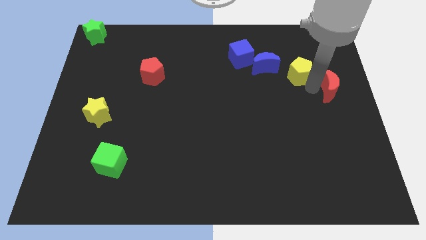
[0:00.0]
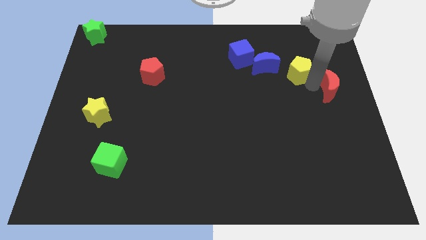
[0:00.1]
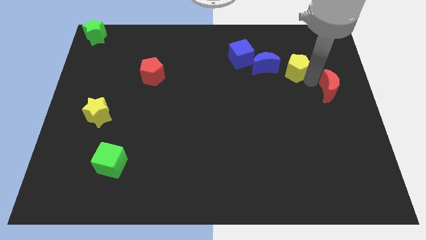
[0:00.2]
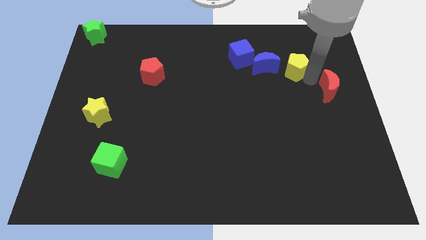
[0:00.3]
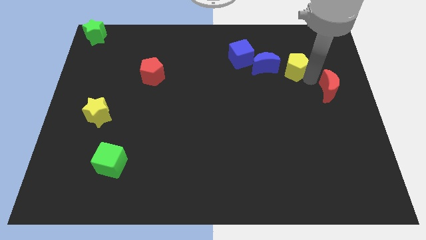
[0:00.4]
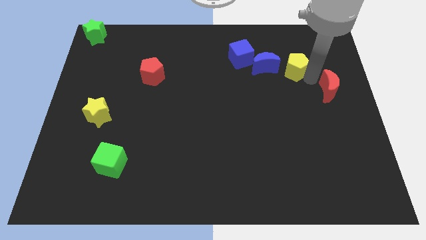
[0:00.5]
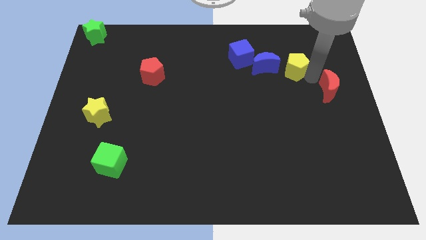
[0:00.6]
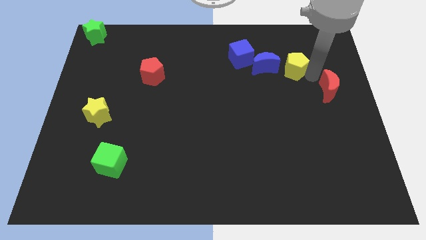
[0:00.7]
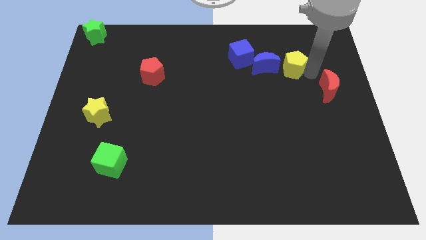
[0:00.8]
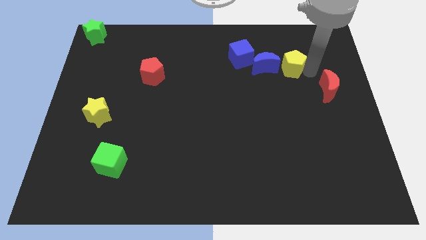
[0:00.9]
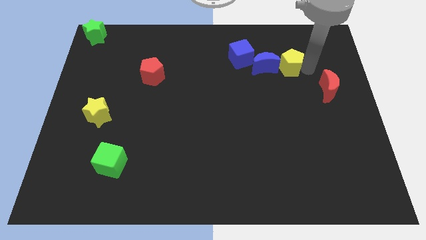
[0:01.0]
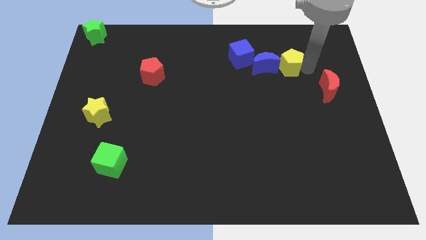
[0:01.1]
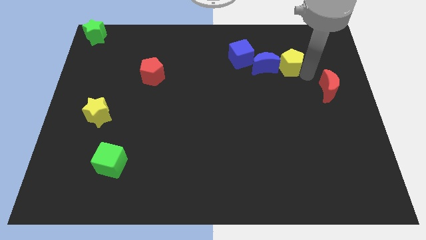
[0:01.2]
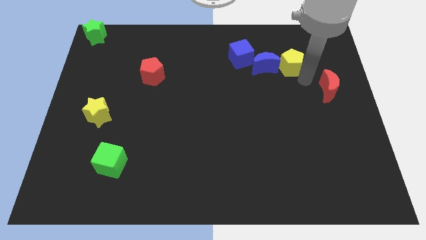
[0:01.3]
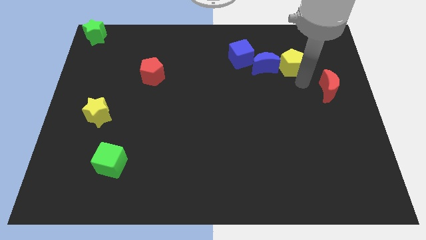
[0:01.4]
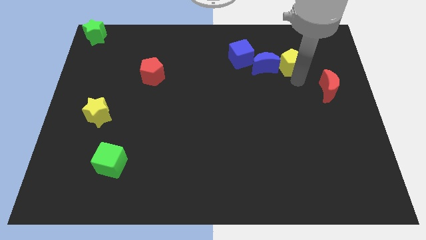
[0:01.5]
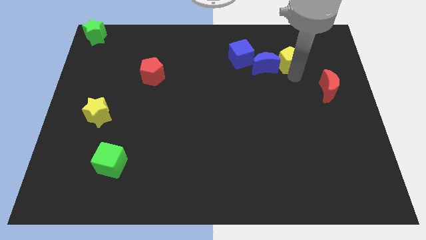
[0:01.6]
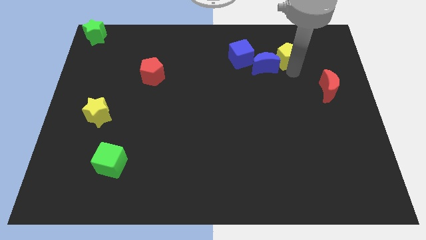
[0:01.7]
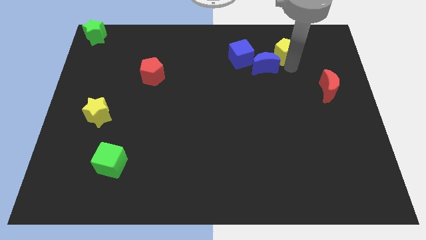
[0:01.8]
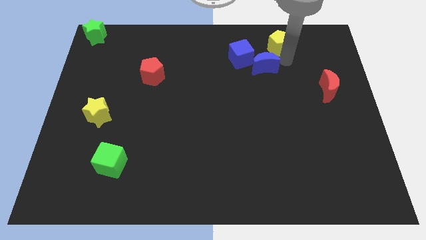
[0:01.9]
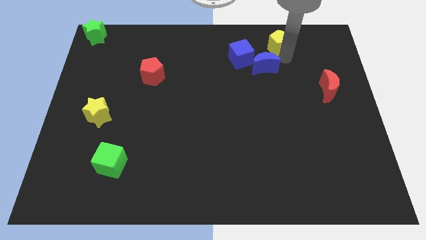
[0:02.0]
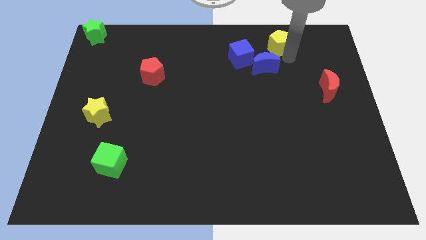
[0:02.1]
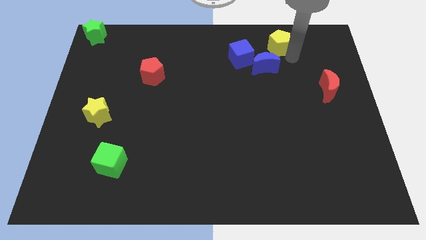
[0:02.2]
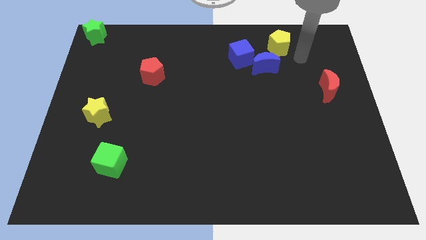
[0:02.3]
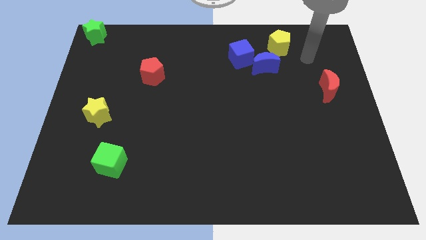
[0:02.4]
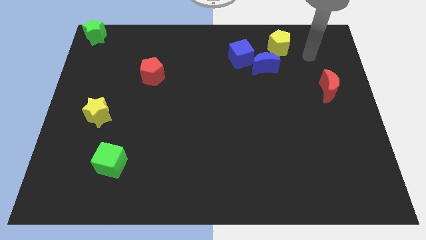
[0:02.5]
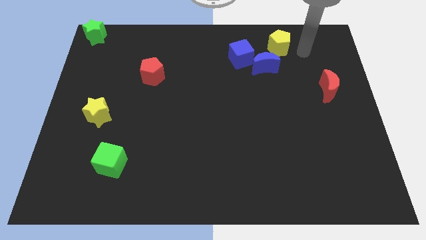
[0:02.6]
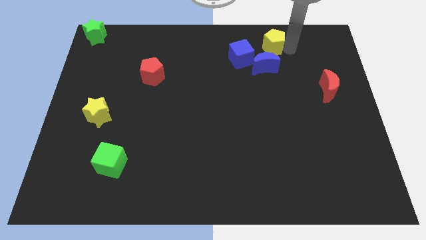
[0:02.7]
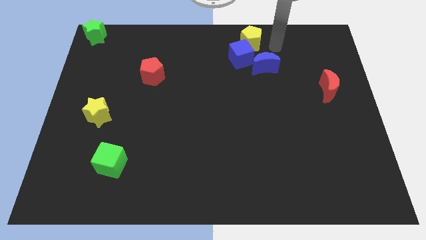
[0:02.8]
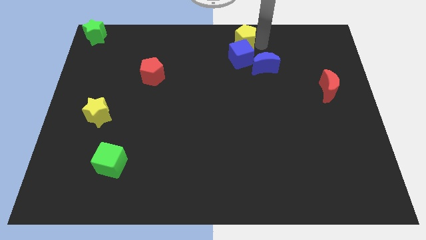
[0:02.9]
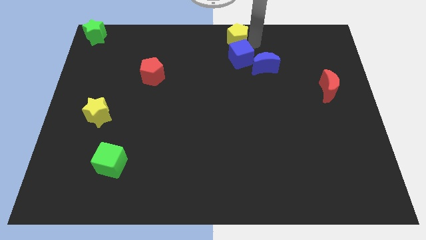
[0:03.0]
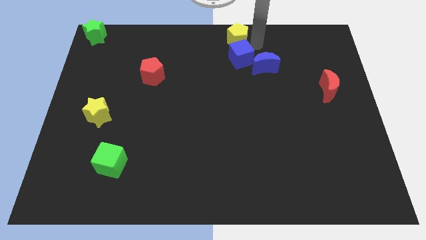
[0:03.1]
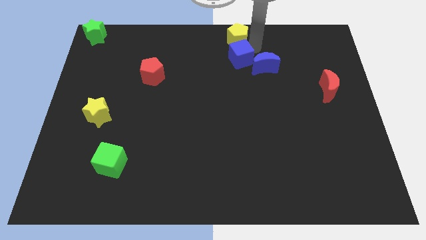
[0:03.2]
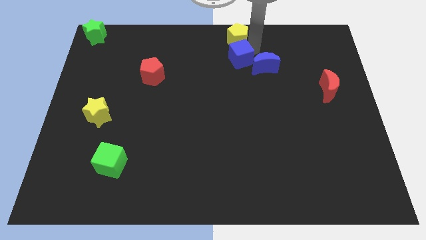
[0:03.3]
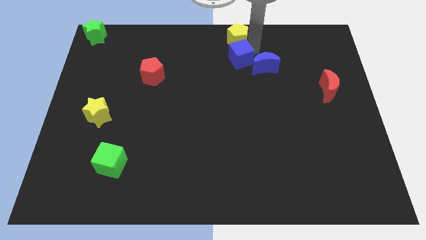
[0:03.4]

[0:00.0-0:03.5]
place the yellow pentagon above the blue cube

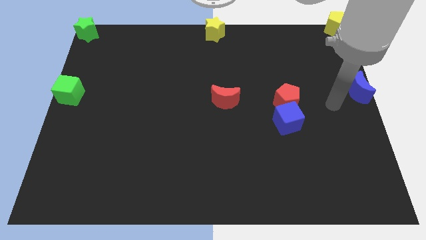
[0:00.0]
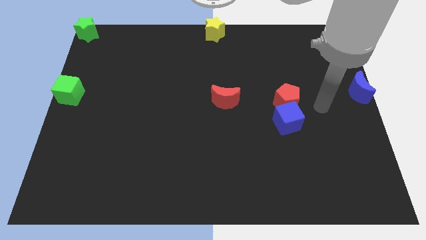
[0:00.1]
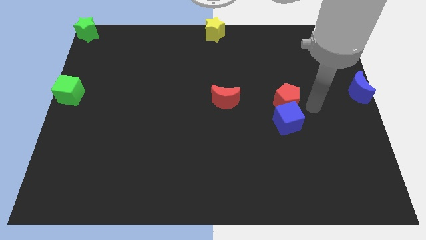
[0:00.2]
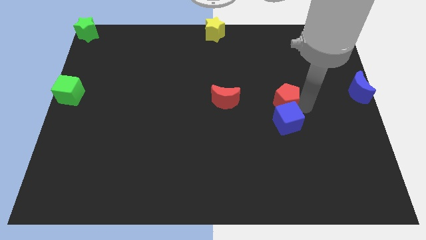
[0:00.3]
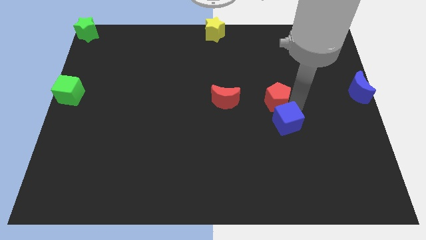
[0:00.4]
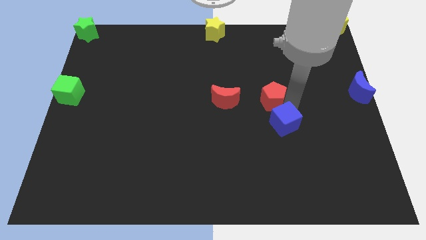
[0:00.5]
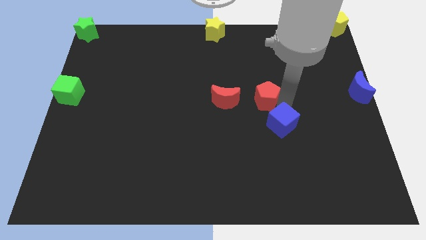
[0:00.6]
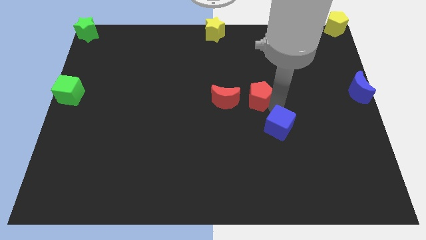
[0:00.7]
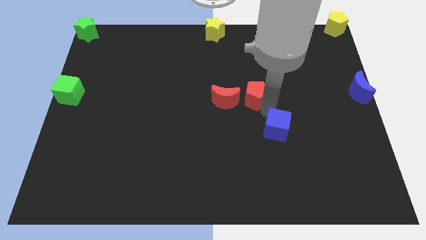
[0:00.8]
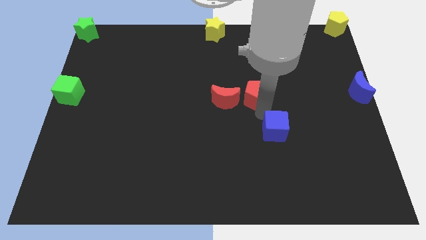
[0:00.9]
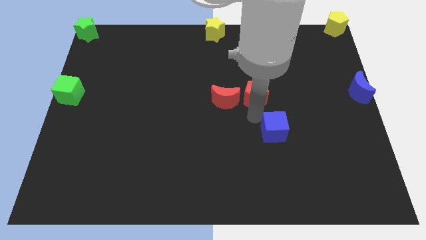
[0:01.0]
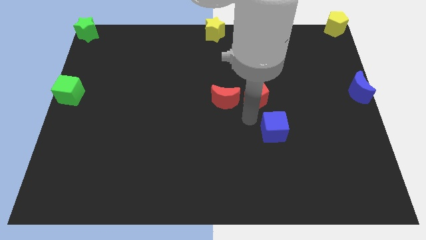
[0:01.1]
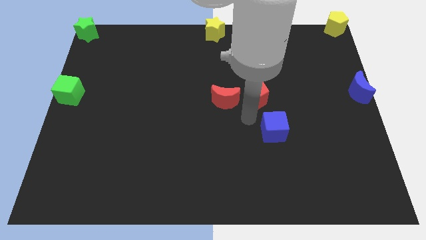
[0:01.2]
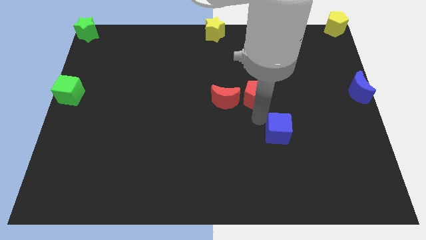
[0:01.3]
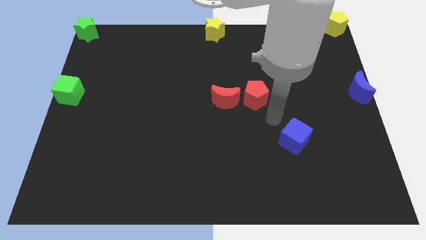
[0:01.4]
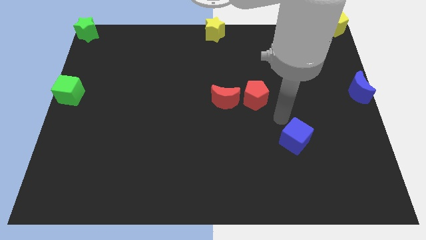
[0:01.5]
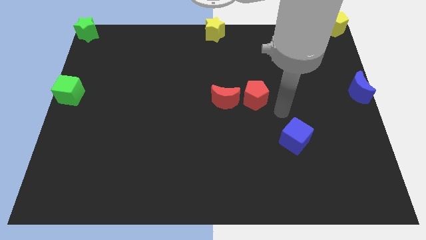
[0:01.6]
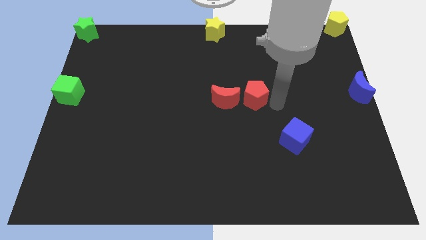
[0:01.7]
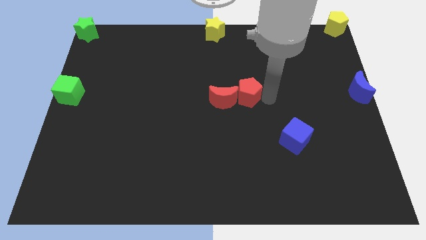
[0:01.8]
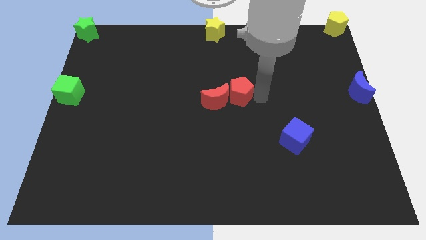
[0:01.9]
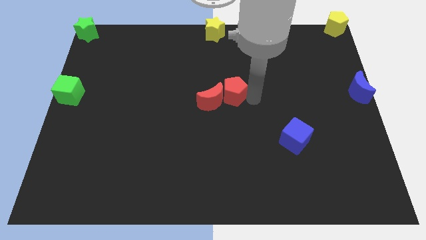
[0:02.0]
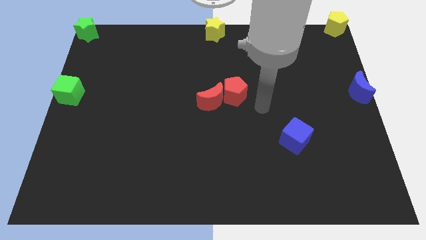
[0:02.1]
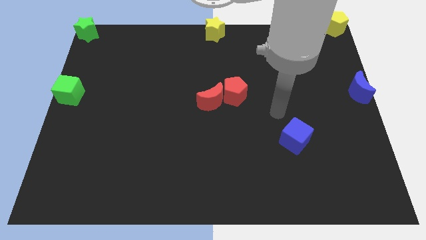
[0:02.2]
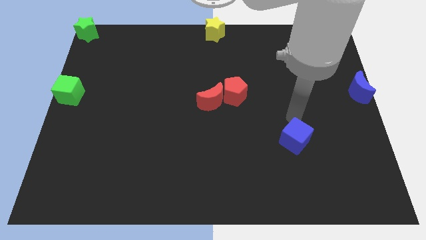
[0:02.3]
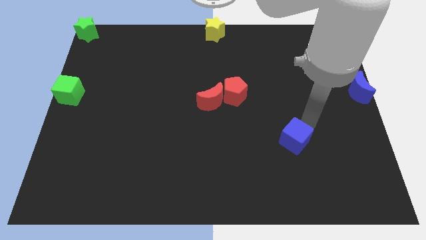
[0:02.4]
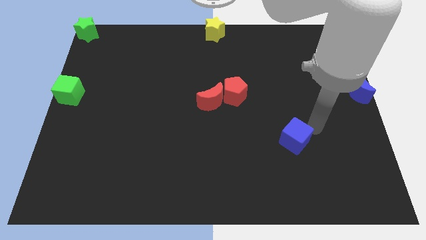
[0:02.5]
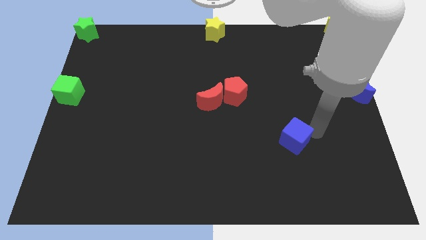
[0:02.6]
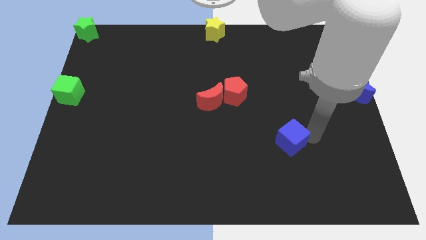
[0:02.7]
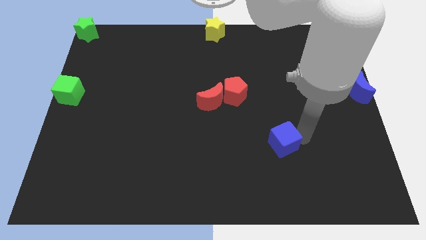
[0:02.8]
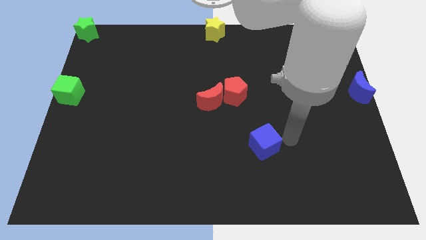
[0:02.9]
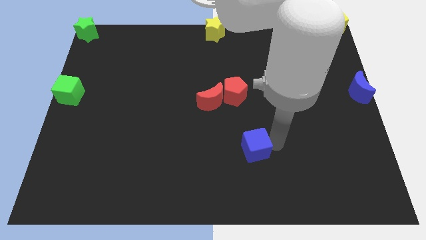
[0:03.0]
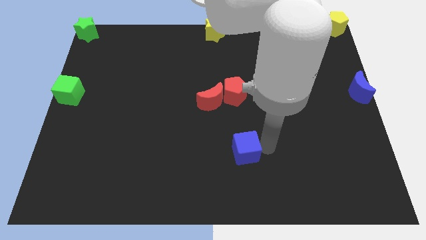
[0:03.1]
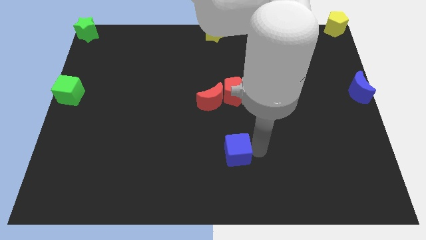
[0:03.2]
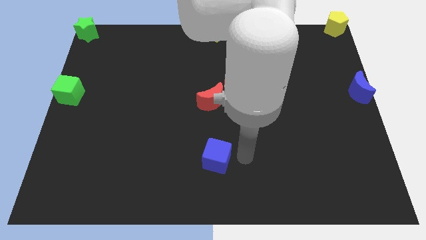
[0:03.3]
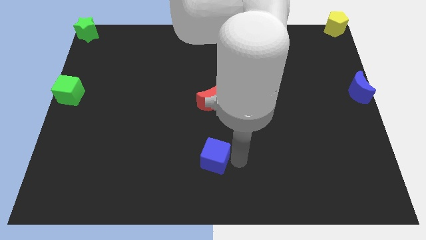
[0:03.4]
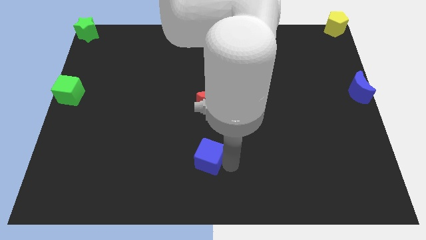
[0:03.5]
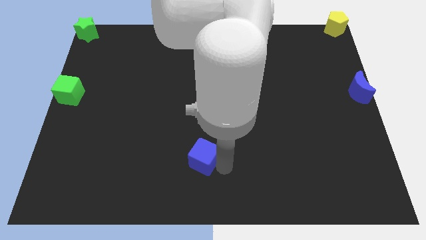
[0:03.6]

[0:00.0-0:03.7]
push blue cube to bottom center of the board

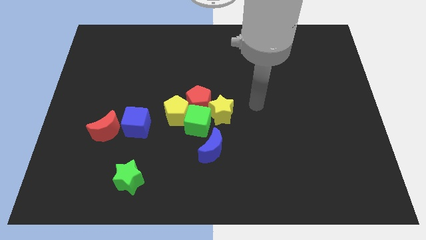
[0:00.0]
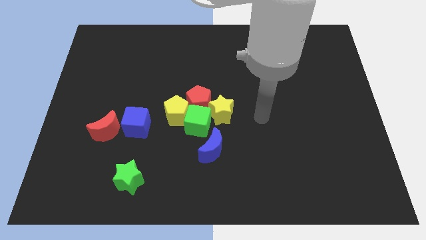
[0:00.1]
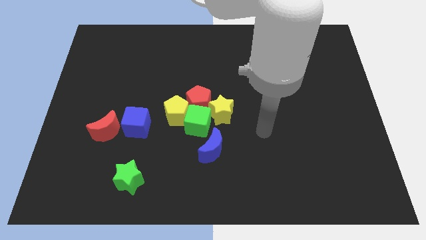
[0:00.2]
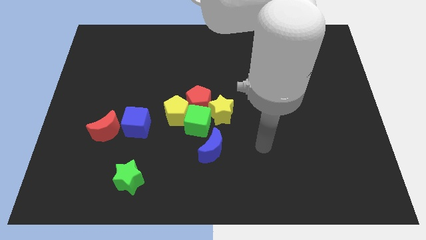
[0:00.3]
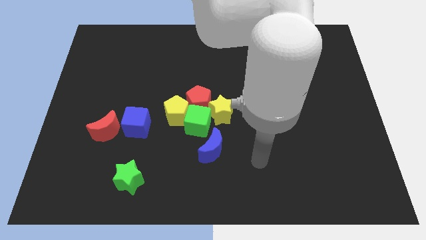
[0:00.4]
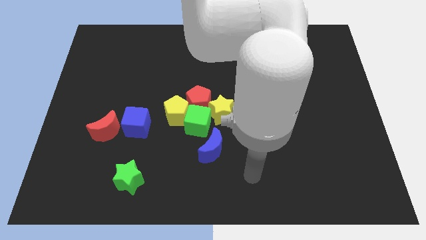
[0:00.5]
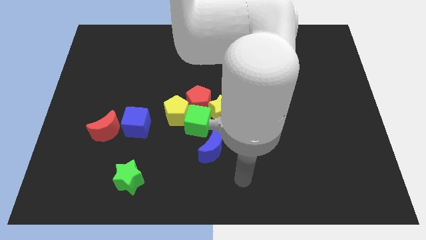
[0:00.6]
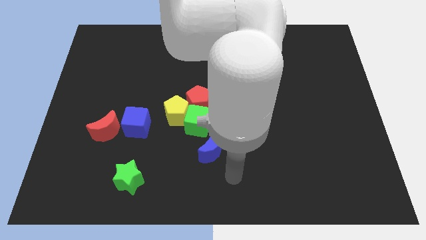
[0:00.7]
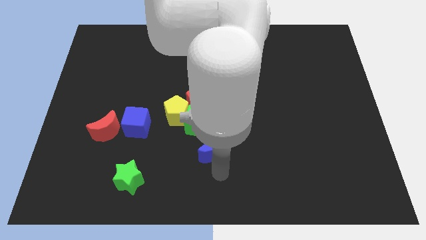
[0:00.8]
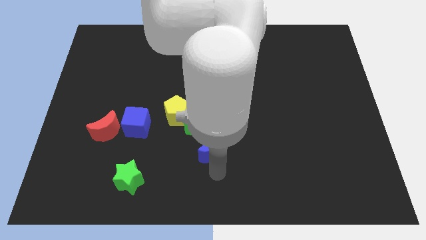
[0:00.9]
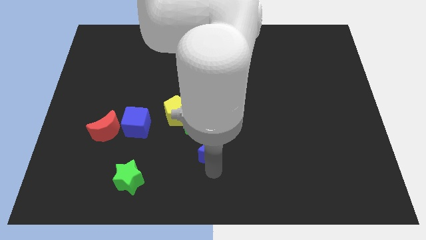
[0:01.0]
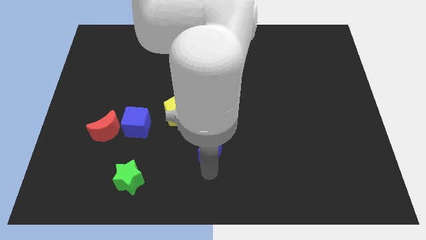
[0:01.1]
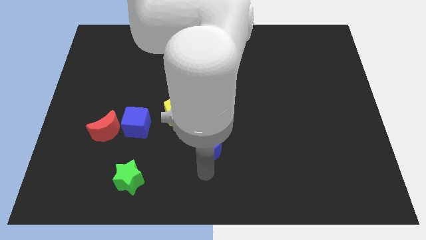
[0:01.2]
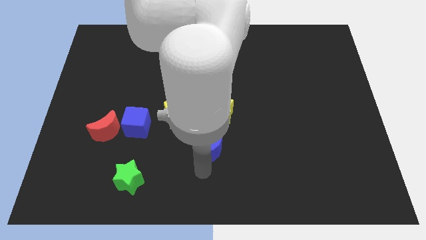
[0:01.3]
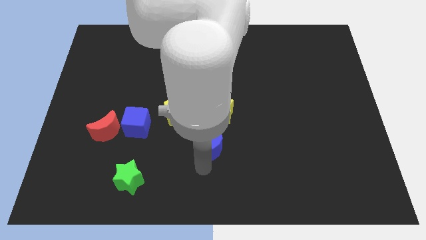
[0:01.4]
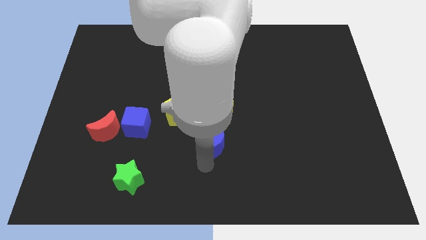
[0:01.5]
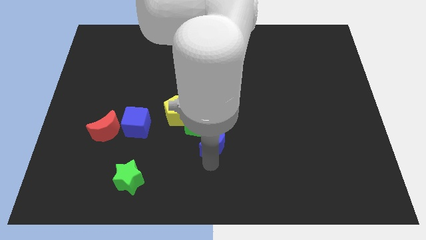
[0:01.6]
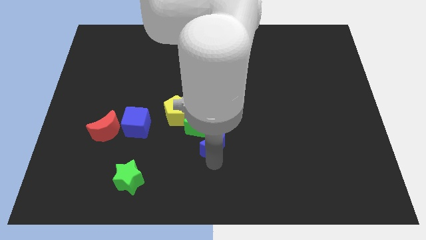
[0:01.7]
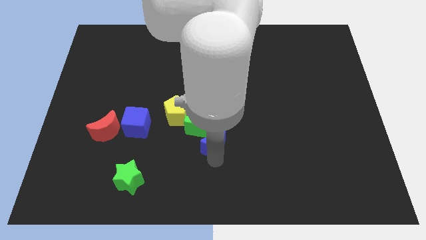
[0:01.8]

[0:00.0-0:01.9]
move the blue moon close to the green cube and yellow star
